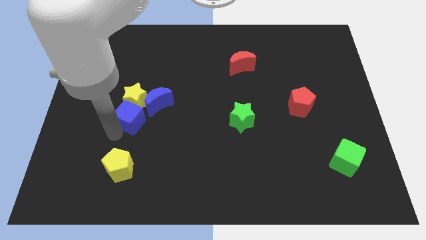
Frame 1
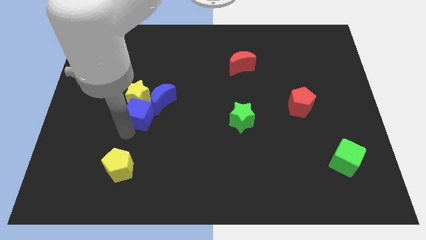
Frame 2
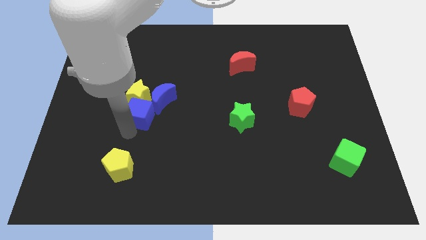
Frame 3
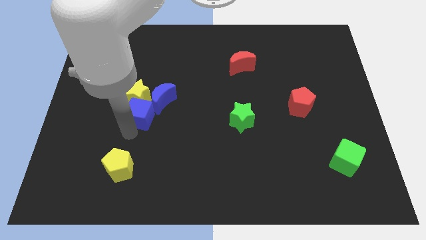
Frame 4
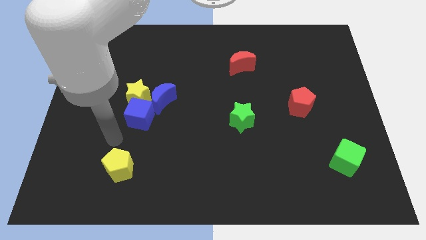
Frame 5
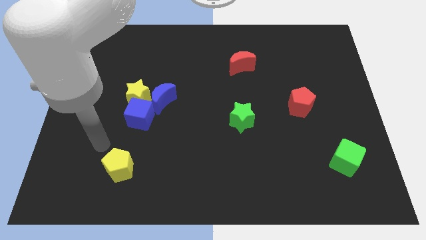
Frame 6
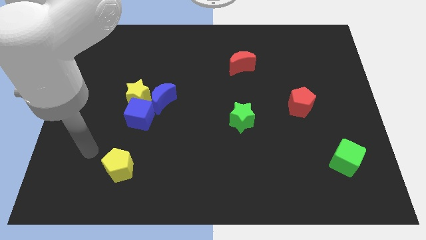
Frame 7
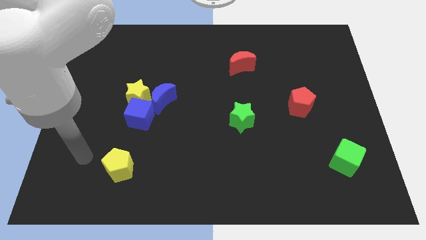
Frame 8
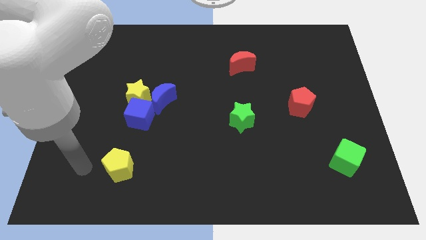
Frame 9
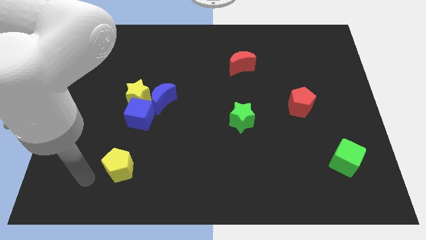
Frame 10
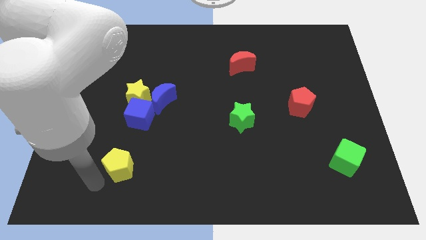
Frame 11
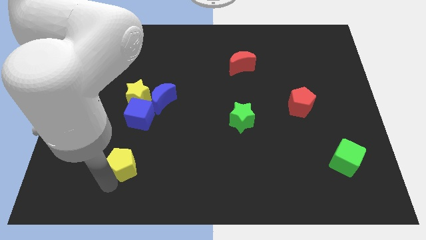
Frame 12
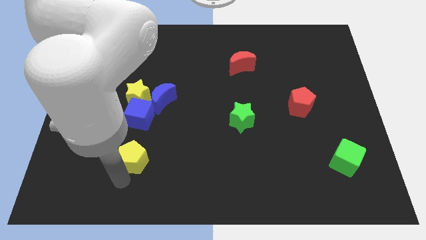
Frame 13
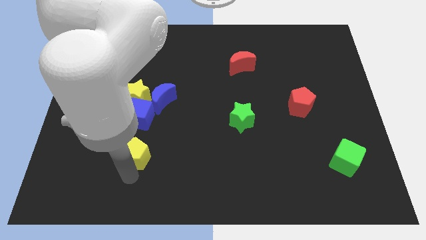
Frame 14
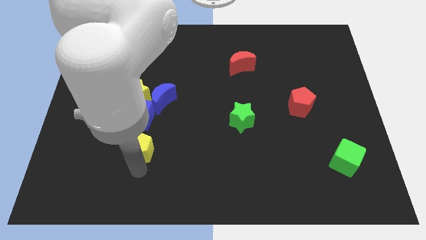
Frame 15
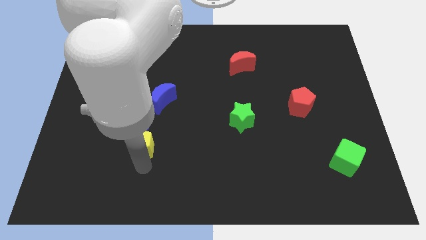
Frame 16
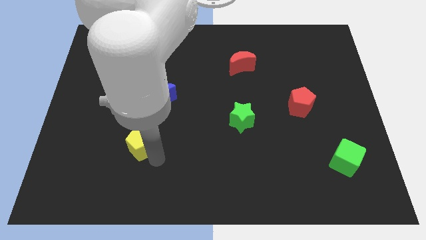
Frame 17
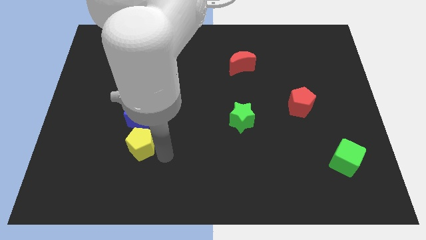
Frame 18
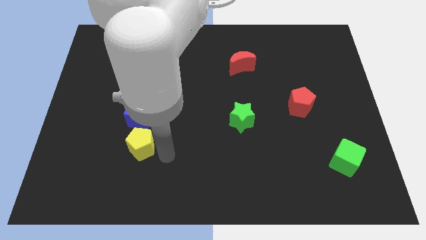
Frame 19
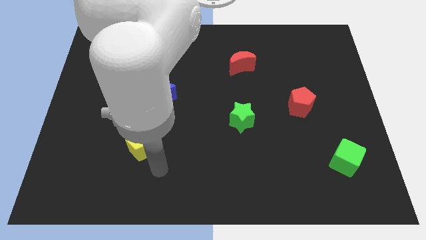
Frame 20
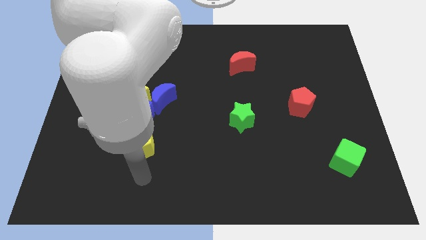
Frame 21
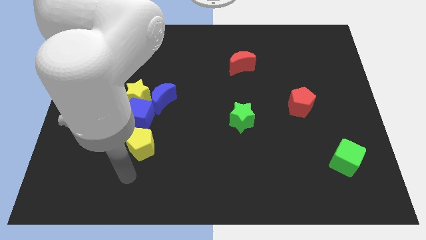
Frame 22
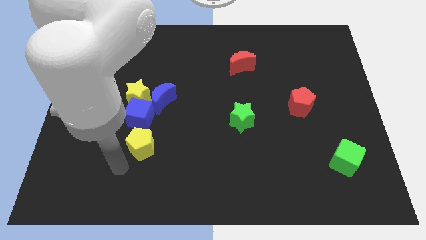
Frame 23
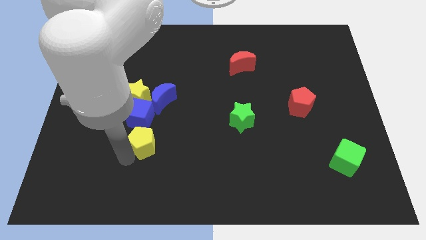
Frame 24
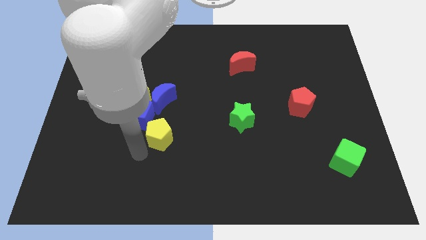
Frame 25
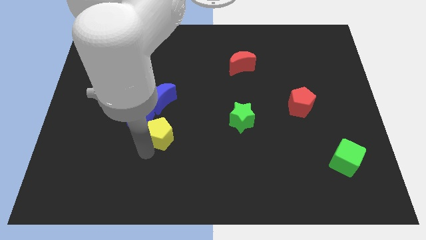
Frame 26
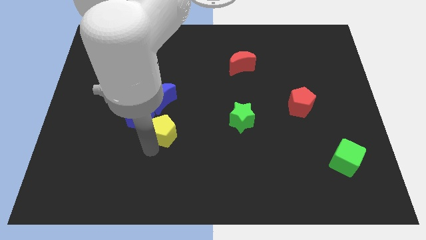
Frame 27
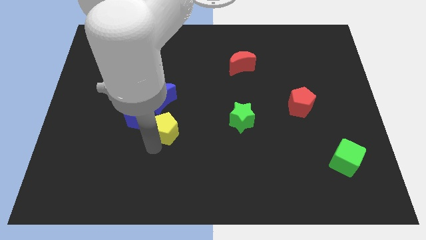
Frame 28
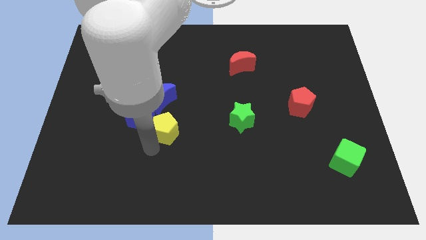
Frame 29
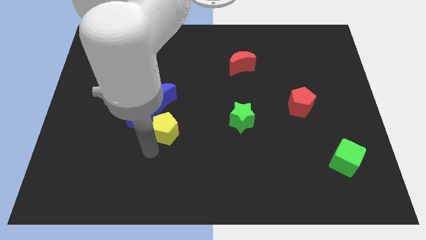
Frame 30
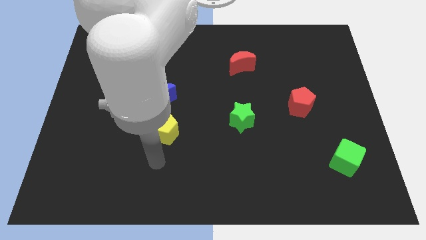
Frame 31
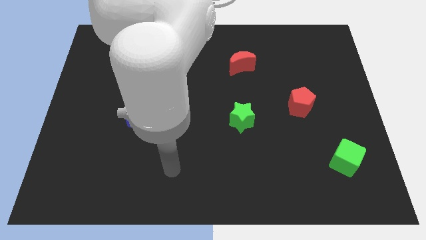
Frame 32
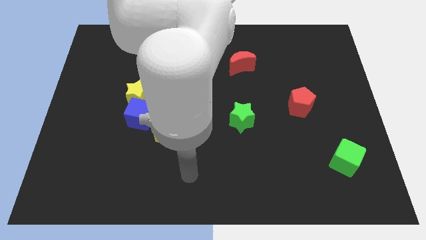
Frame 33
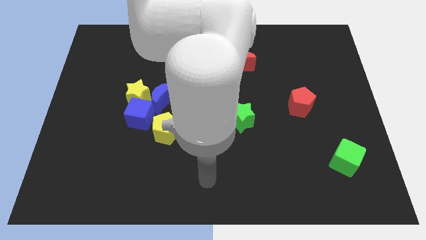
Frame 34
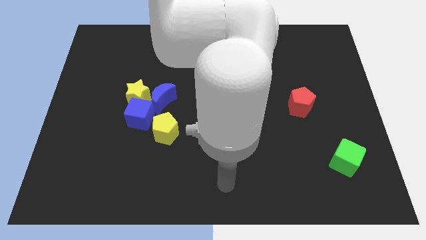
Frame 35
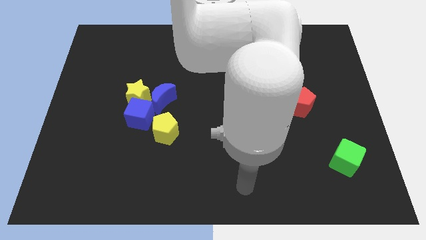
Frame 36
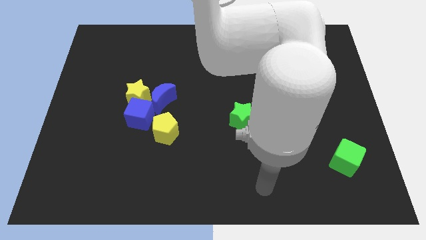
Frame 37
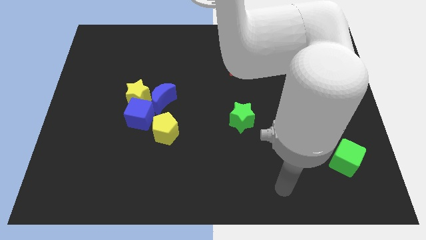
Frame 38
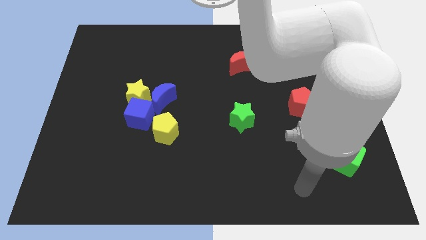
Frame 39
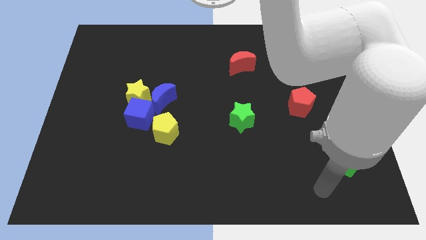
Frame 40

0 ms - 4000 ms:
place yellow pentagon to the right side of blue cube

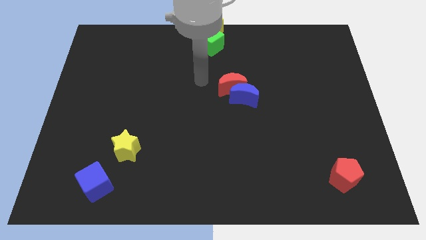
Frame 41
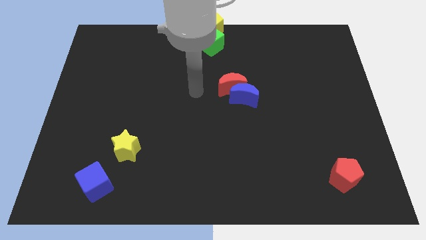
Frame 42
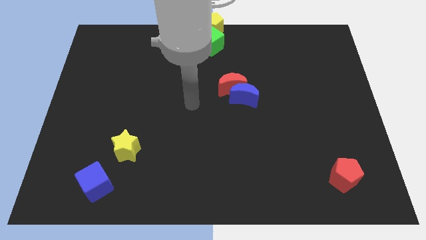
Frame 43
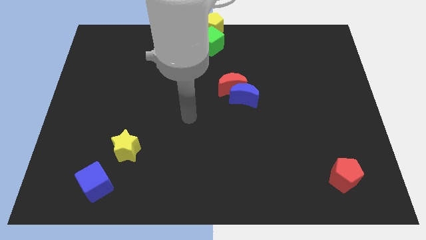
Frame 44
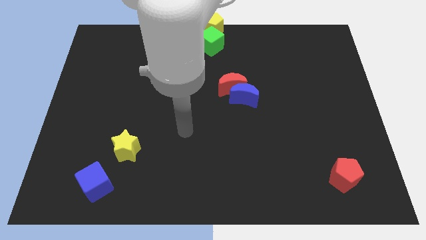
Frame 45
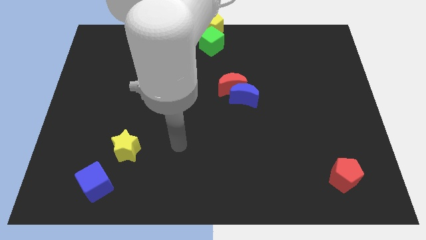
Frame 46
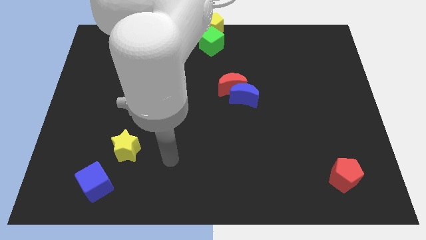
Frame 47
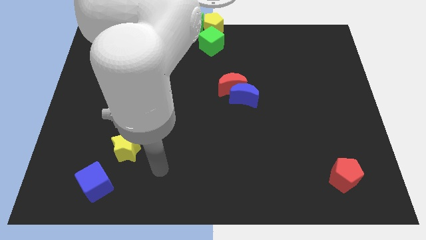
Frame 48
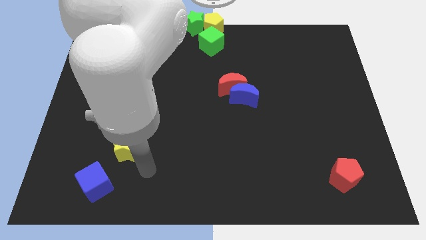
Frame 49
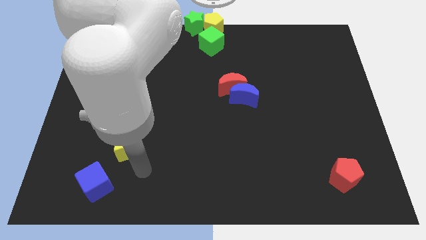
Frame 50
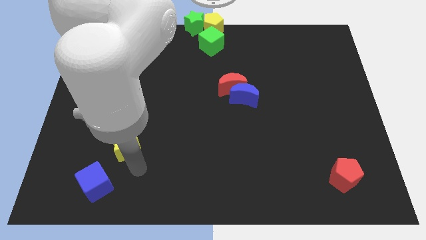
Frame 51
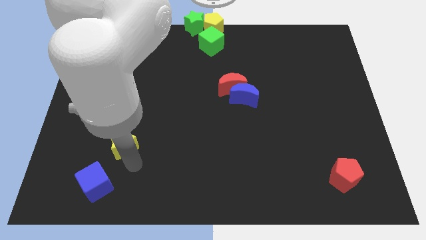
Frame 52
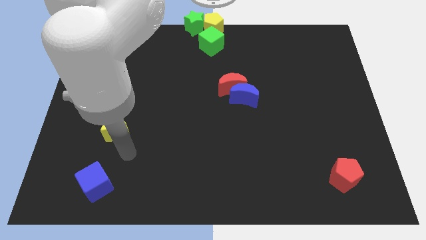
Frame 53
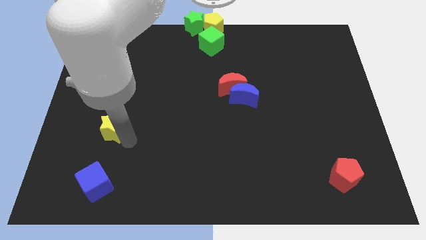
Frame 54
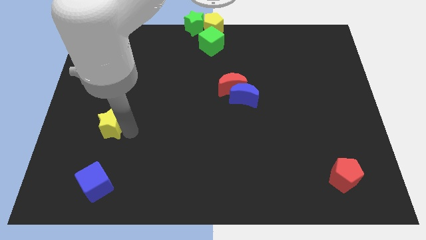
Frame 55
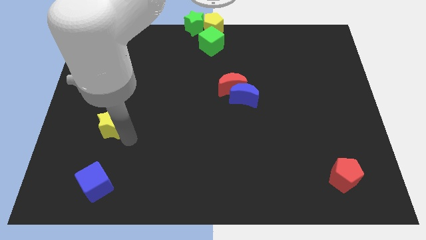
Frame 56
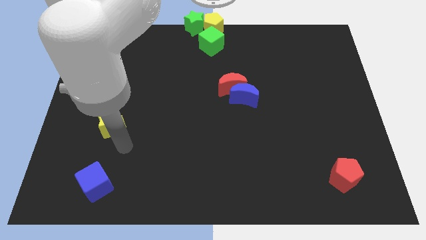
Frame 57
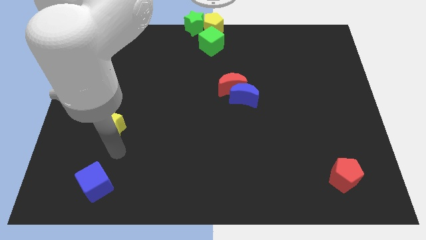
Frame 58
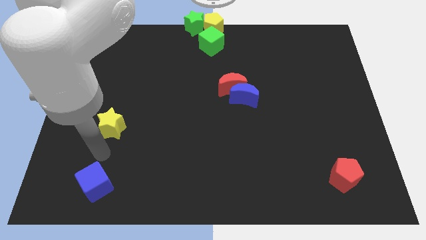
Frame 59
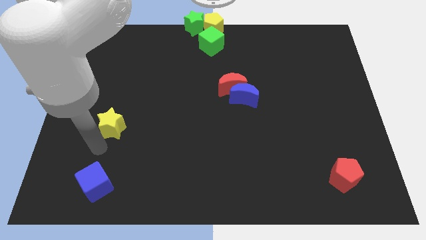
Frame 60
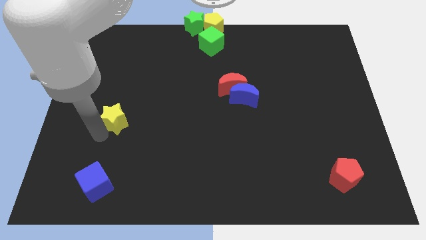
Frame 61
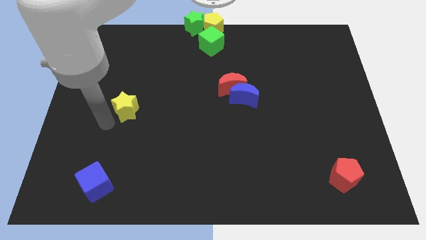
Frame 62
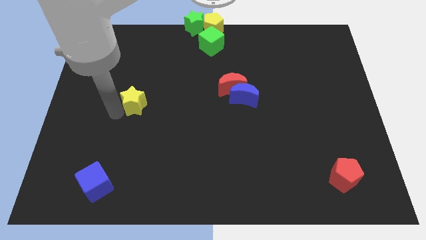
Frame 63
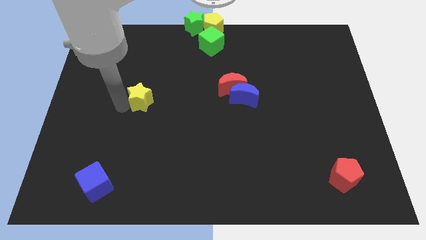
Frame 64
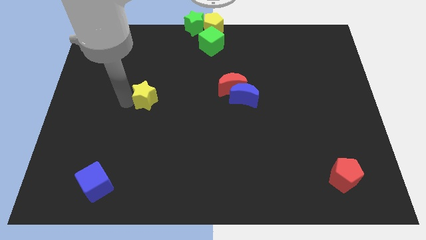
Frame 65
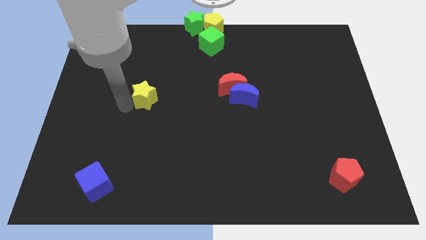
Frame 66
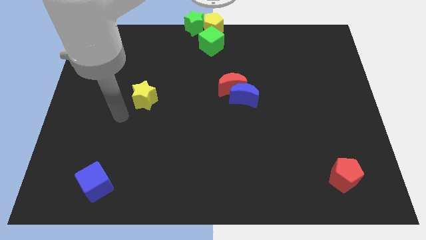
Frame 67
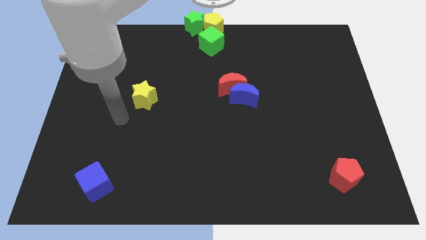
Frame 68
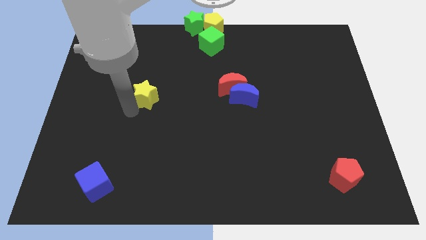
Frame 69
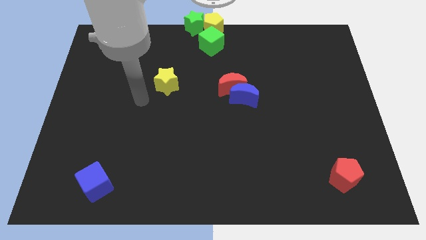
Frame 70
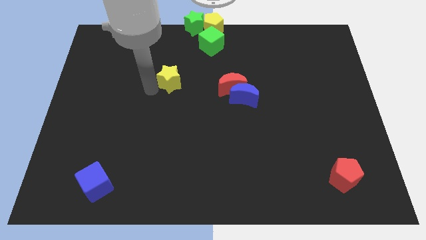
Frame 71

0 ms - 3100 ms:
move the yellow star to the left of the red crescent

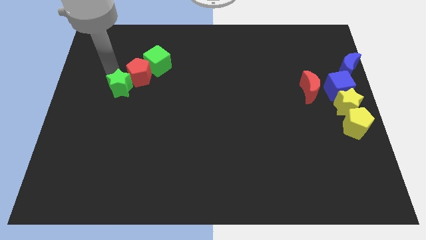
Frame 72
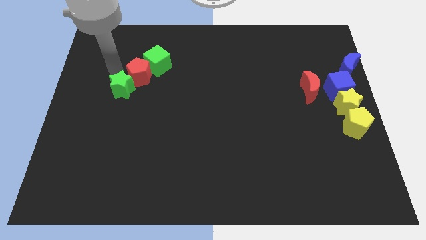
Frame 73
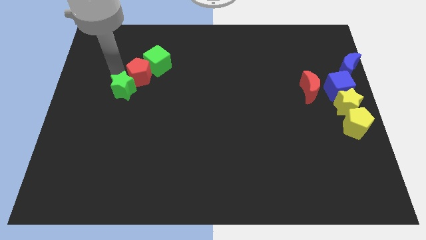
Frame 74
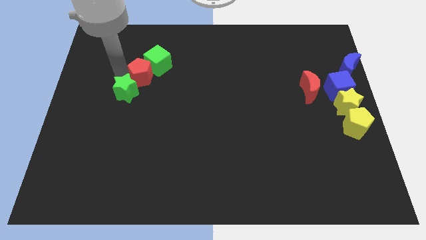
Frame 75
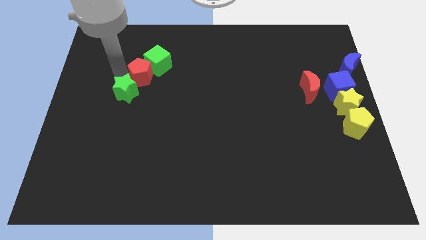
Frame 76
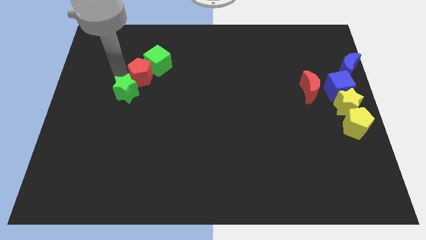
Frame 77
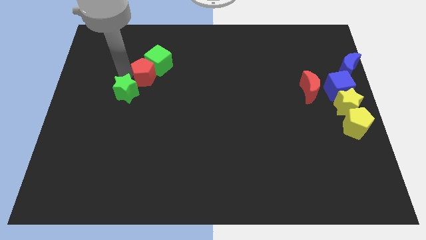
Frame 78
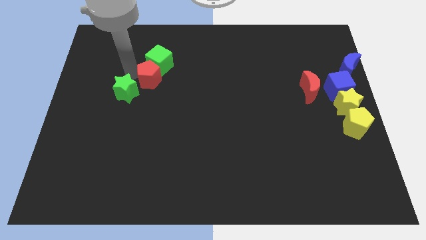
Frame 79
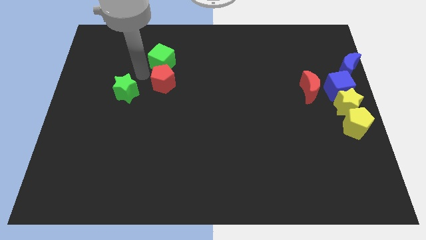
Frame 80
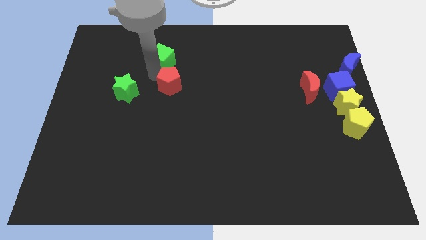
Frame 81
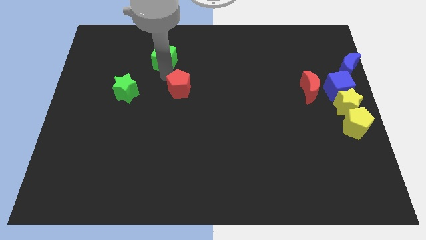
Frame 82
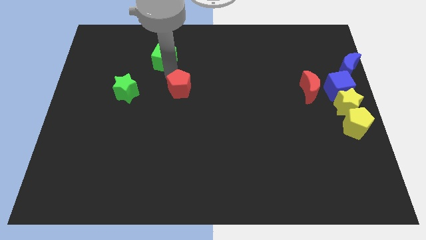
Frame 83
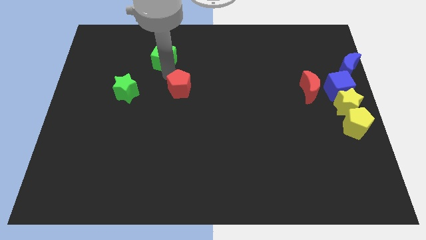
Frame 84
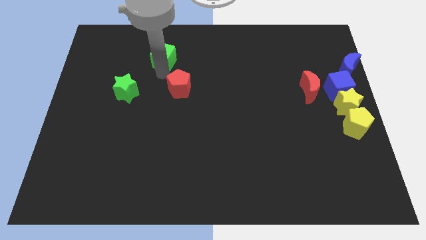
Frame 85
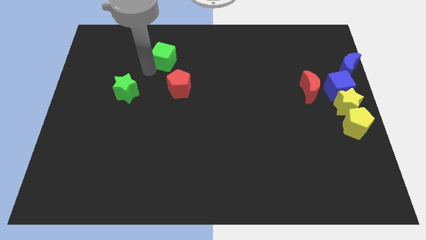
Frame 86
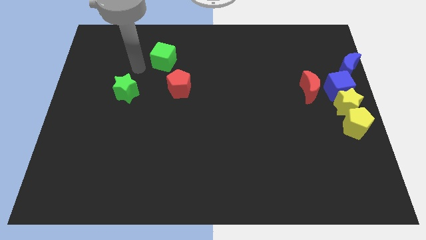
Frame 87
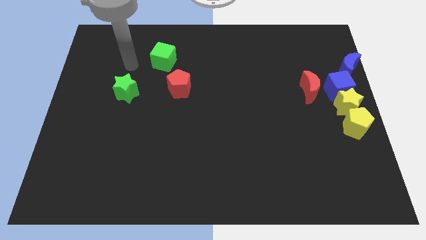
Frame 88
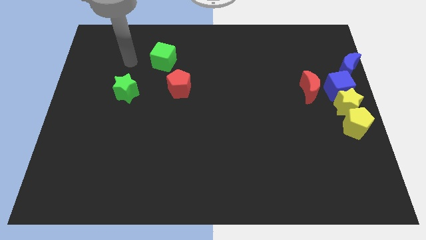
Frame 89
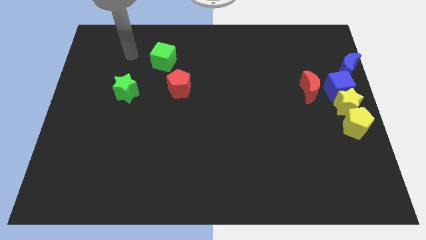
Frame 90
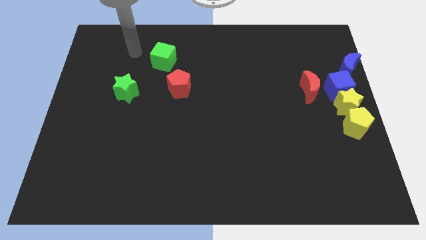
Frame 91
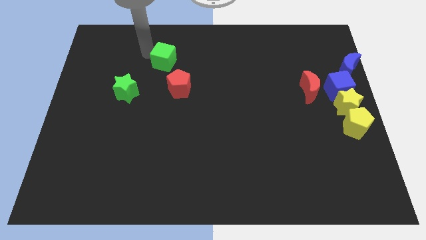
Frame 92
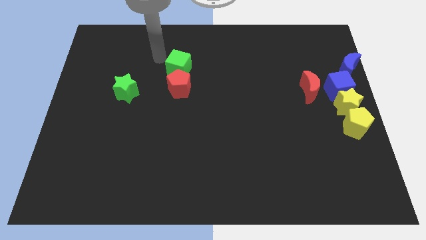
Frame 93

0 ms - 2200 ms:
separate red pentagon from the green star
